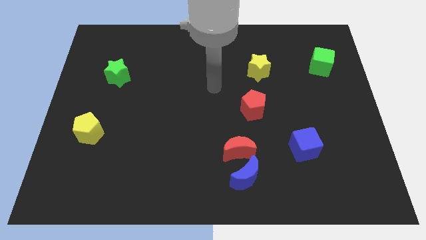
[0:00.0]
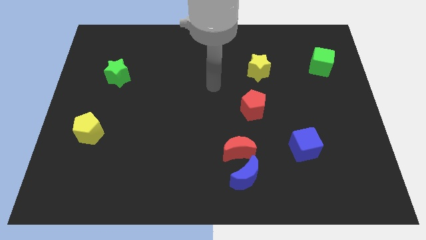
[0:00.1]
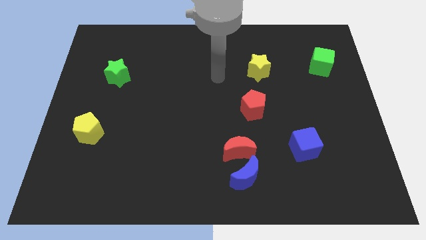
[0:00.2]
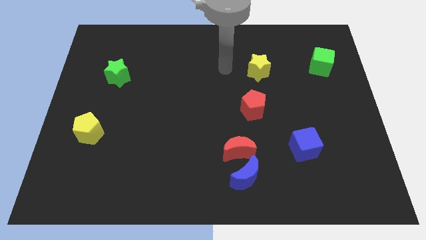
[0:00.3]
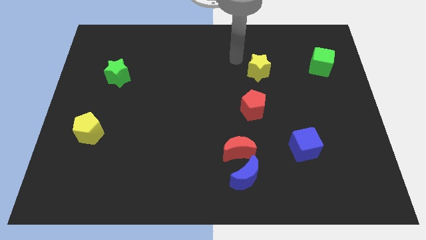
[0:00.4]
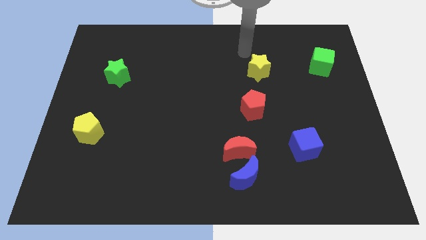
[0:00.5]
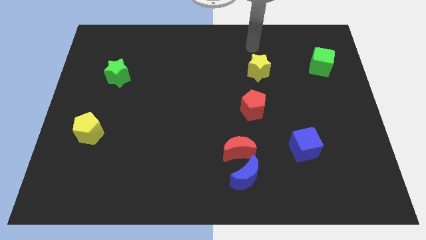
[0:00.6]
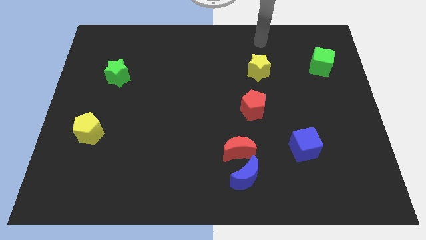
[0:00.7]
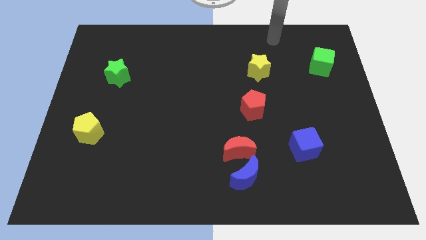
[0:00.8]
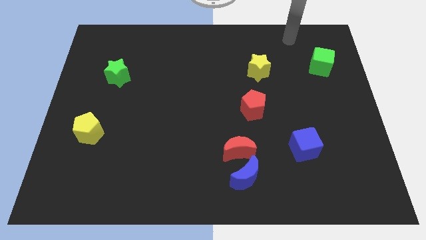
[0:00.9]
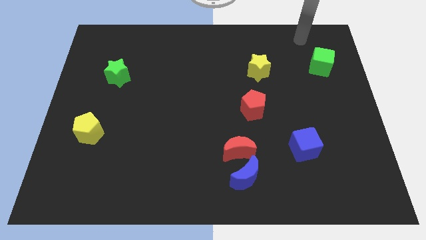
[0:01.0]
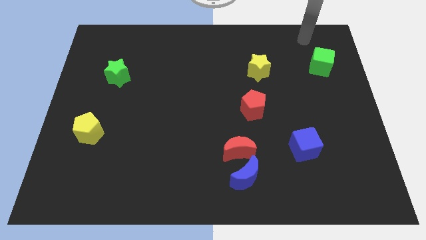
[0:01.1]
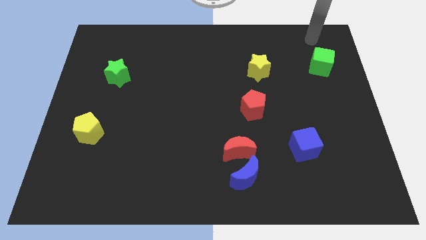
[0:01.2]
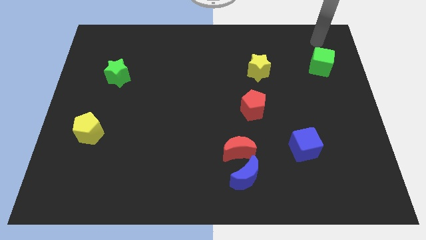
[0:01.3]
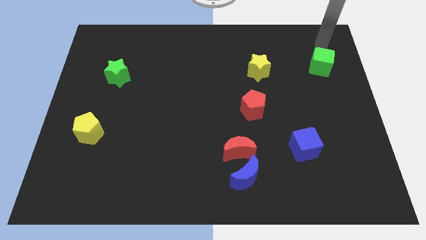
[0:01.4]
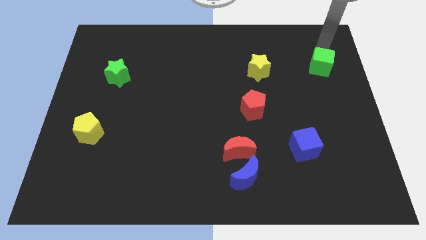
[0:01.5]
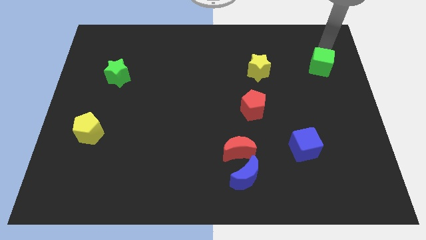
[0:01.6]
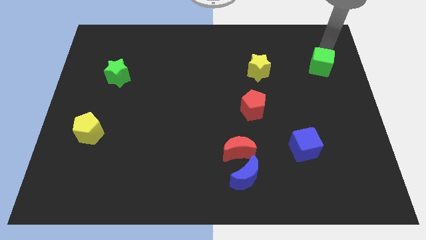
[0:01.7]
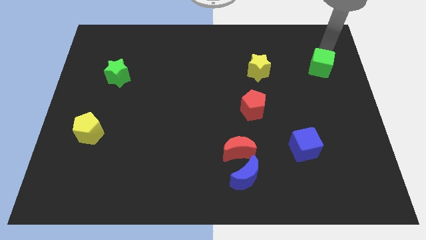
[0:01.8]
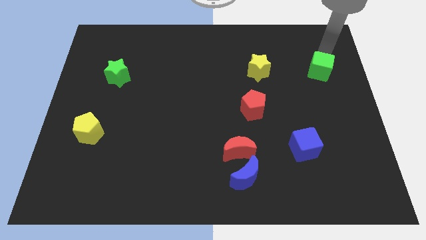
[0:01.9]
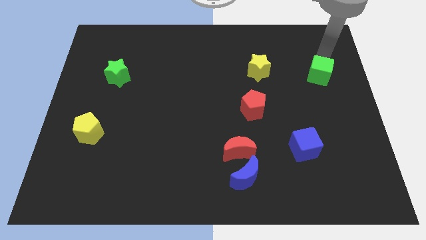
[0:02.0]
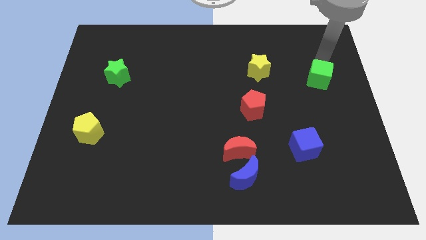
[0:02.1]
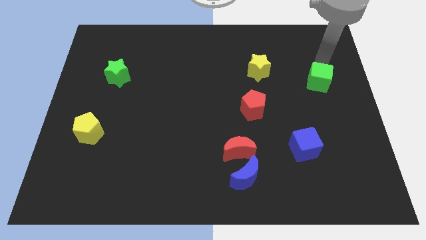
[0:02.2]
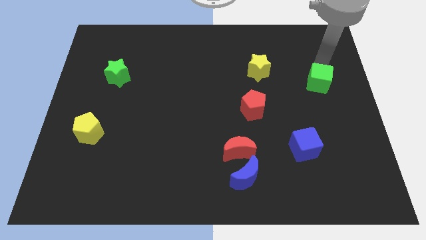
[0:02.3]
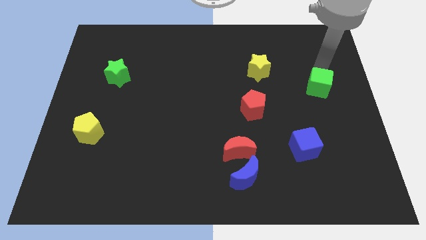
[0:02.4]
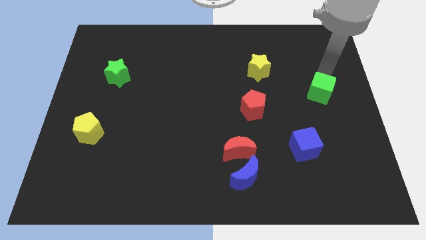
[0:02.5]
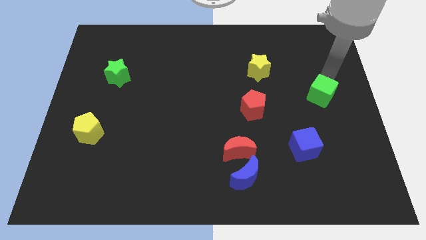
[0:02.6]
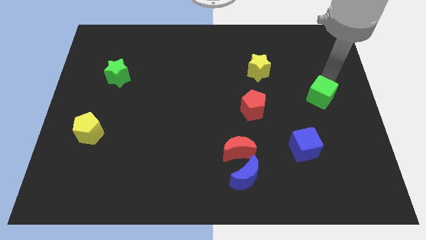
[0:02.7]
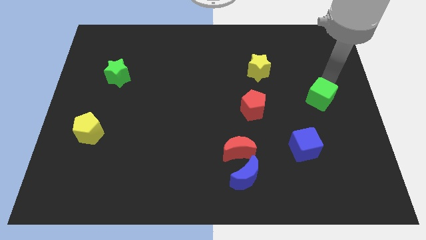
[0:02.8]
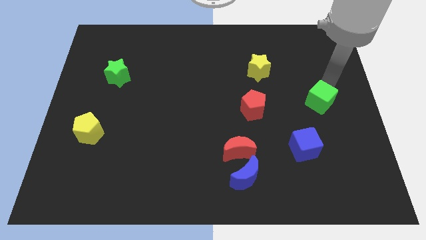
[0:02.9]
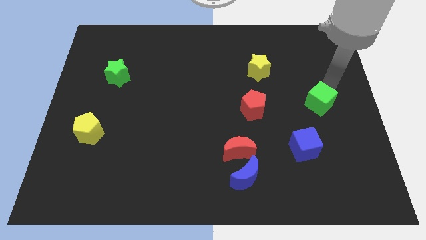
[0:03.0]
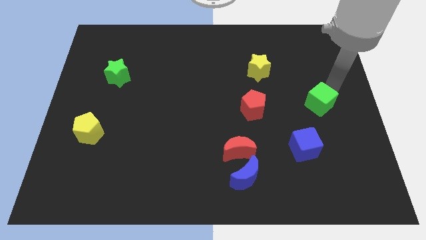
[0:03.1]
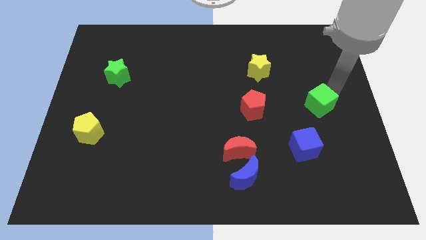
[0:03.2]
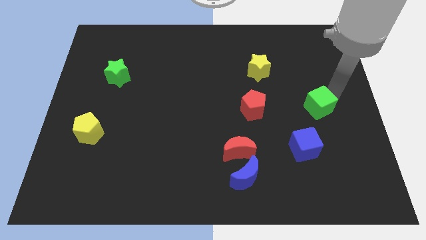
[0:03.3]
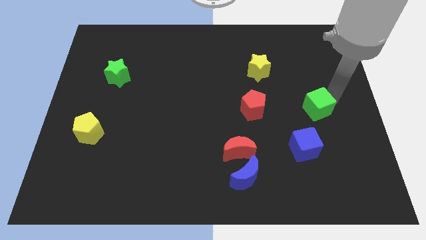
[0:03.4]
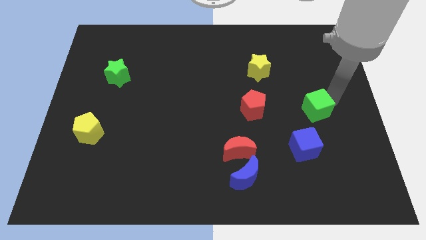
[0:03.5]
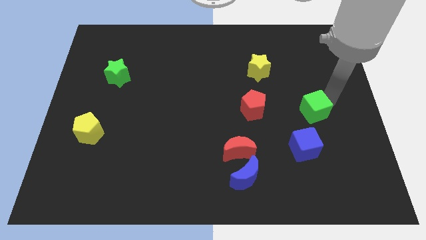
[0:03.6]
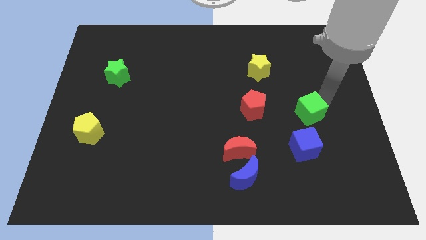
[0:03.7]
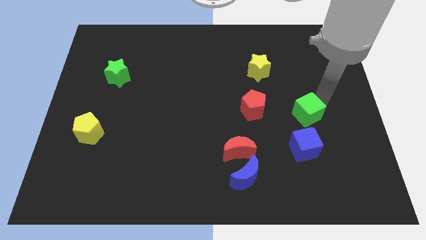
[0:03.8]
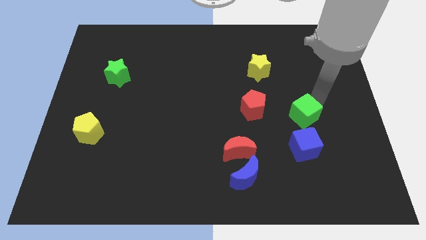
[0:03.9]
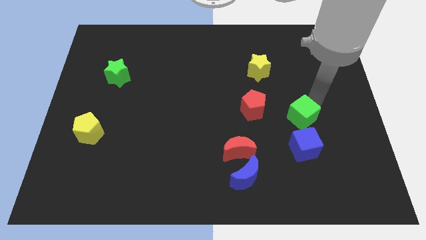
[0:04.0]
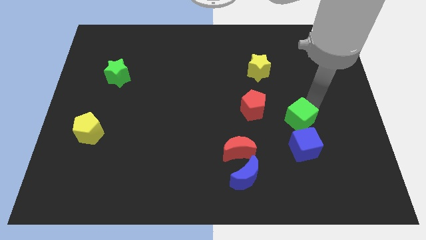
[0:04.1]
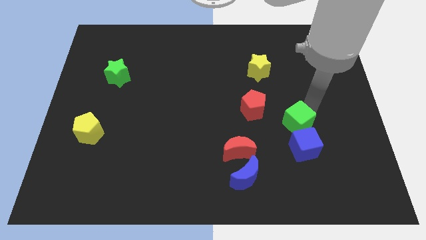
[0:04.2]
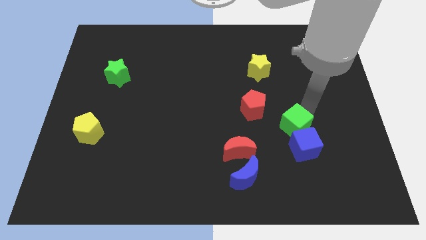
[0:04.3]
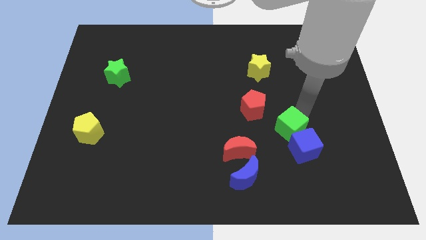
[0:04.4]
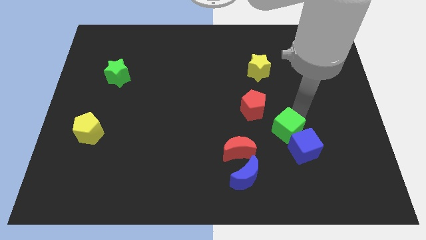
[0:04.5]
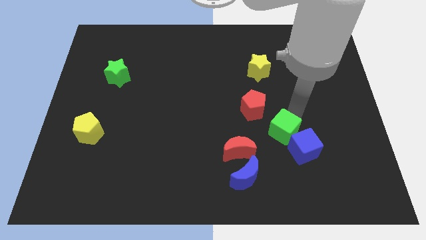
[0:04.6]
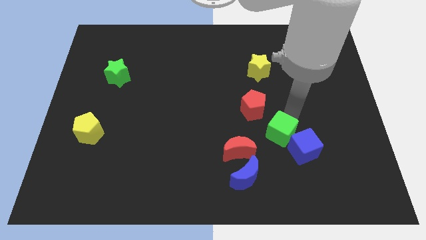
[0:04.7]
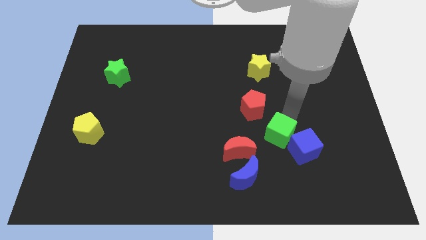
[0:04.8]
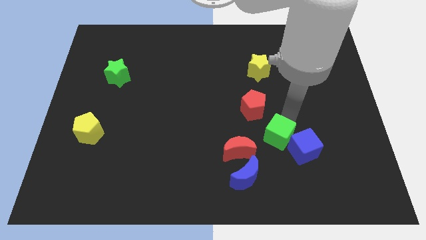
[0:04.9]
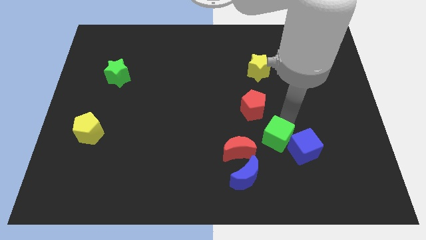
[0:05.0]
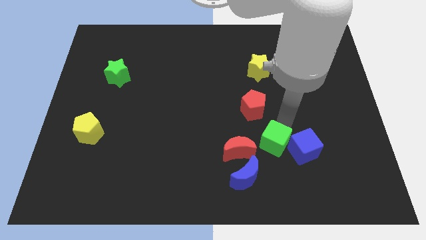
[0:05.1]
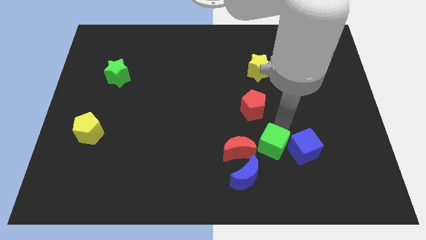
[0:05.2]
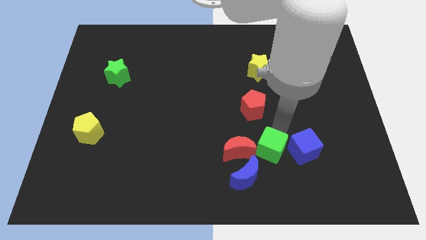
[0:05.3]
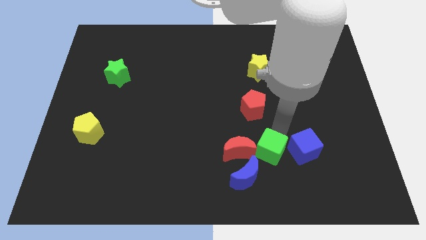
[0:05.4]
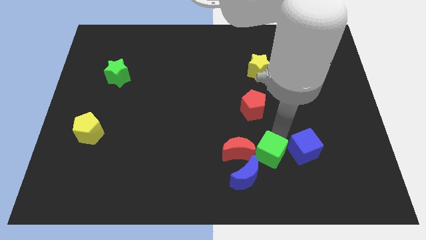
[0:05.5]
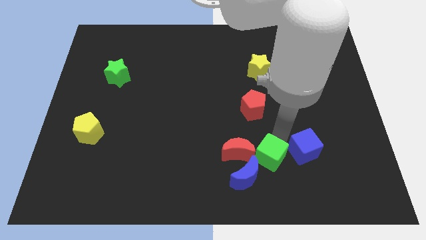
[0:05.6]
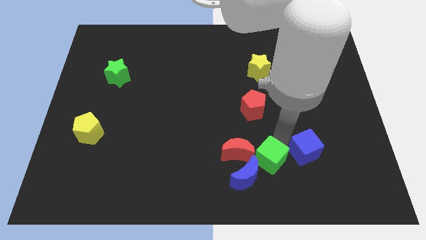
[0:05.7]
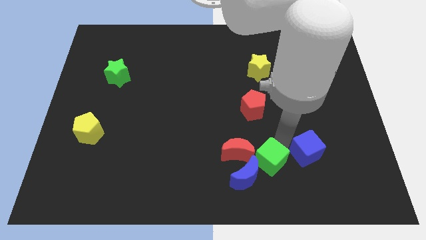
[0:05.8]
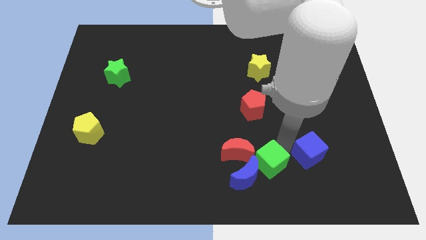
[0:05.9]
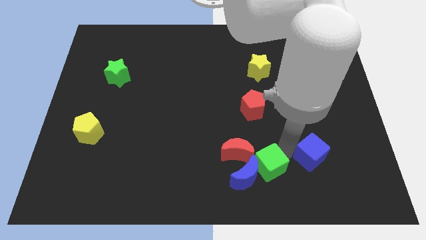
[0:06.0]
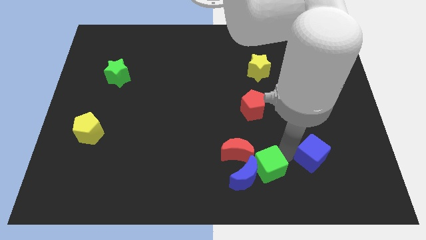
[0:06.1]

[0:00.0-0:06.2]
move the green cube close to the blue moon

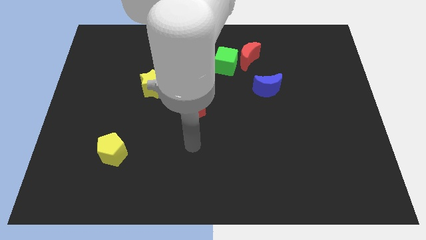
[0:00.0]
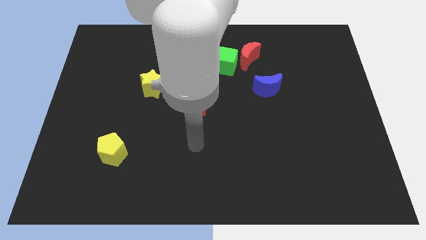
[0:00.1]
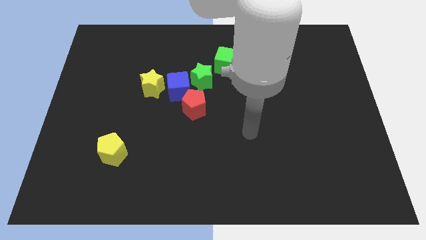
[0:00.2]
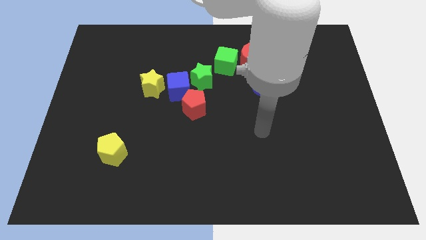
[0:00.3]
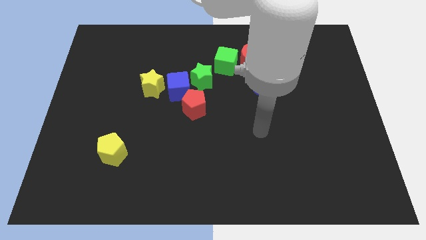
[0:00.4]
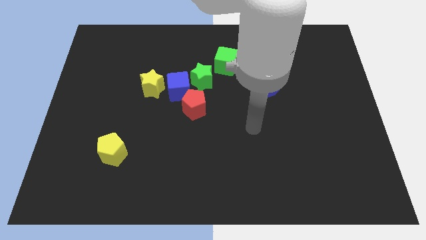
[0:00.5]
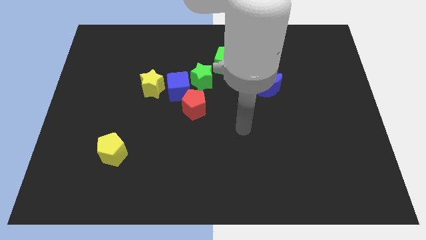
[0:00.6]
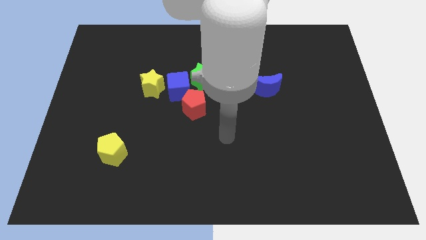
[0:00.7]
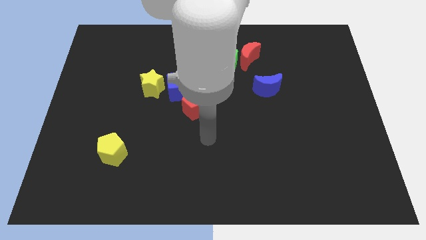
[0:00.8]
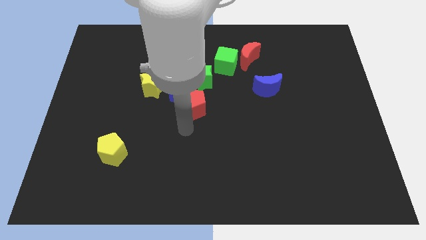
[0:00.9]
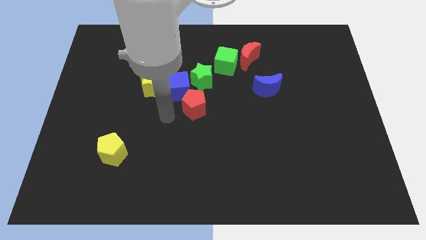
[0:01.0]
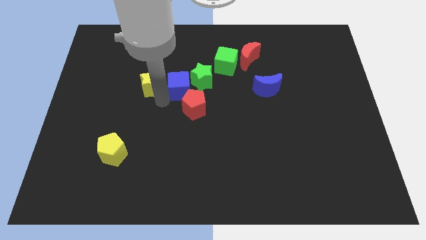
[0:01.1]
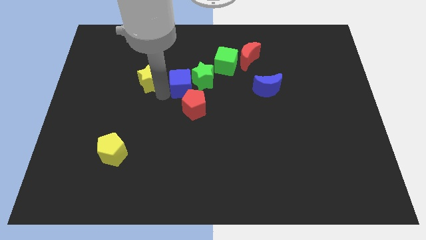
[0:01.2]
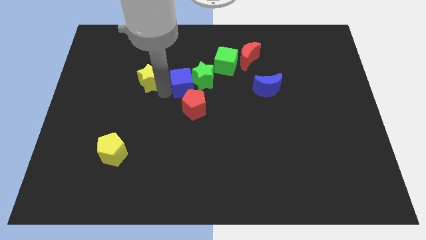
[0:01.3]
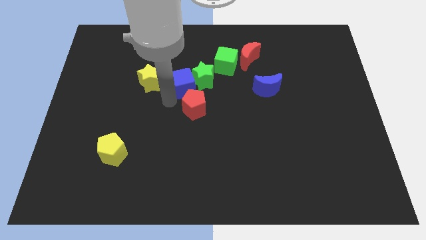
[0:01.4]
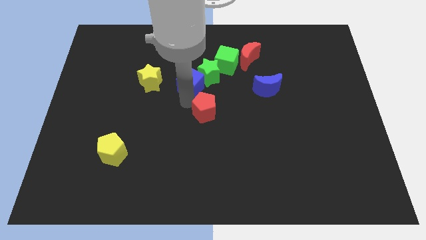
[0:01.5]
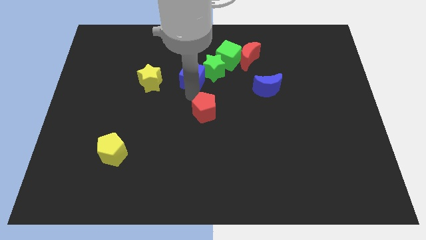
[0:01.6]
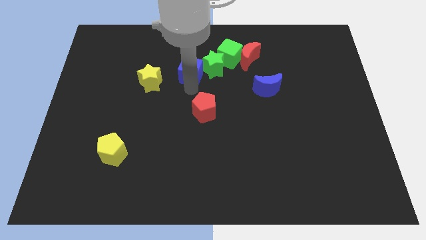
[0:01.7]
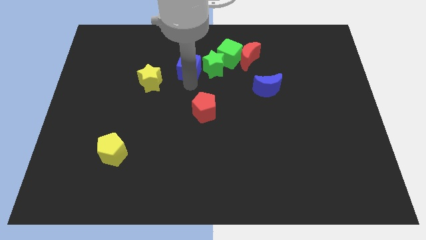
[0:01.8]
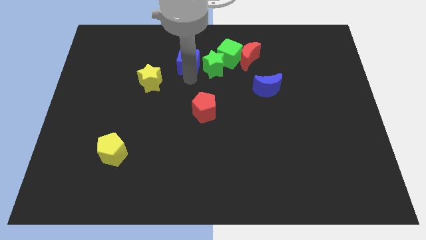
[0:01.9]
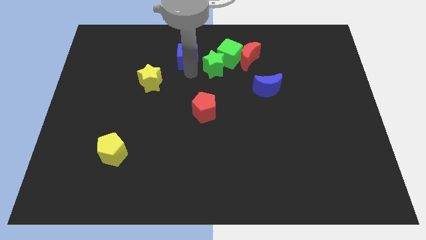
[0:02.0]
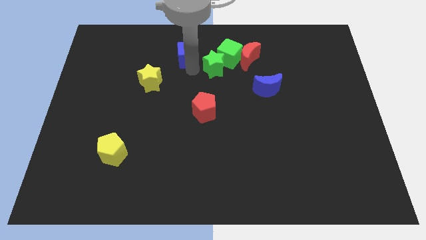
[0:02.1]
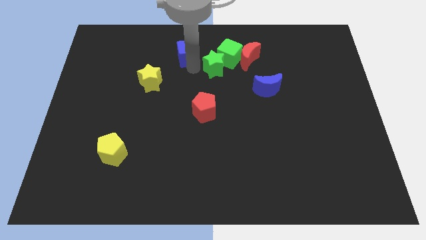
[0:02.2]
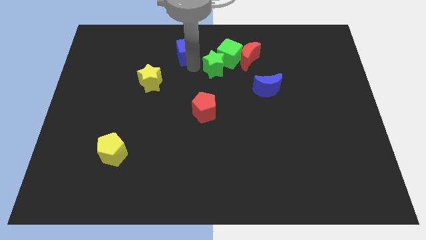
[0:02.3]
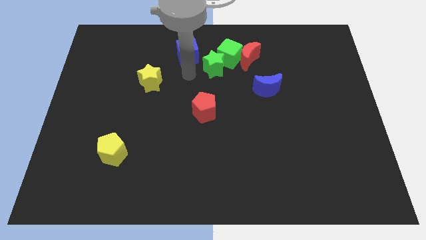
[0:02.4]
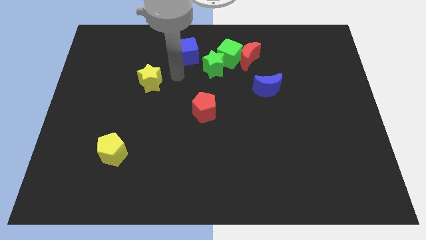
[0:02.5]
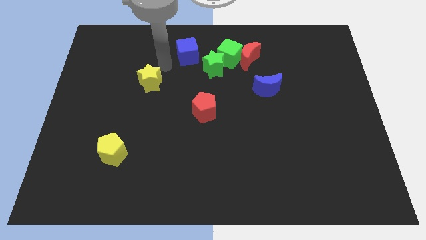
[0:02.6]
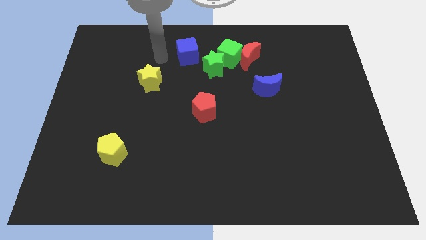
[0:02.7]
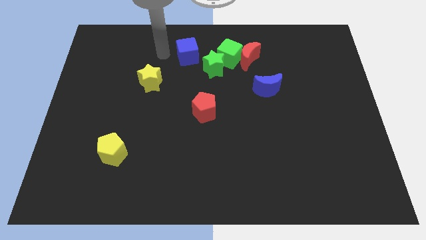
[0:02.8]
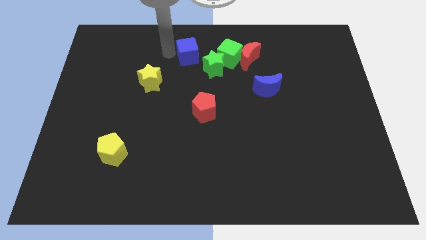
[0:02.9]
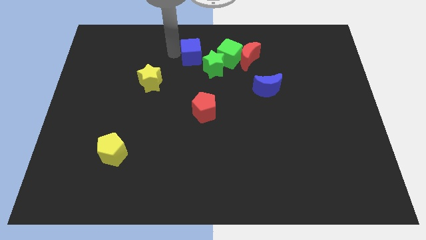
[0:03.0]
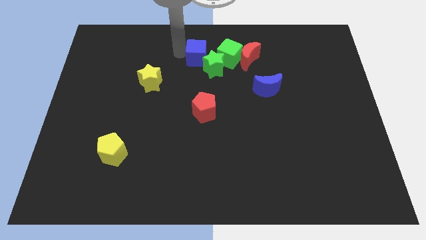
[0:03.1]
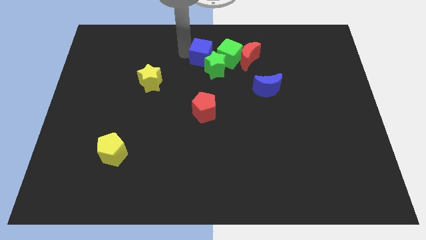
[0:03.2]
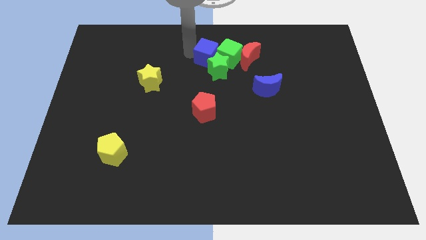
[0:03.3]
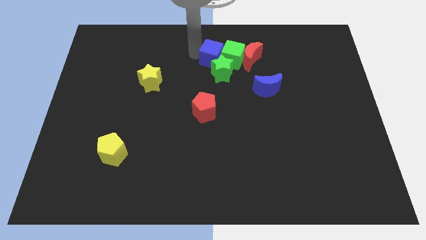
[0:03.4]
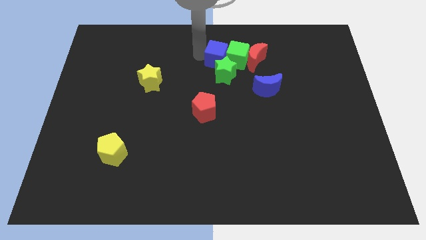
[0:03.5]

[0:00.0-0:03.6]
put the blue cube to the green cube
